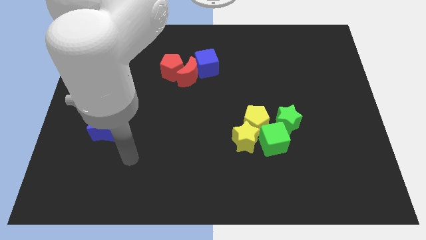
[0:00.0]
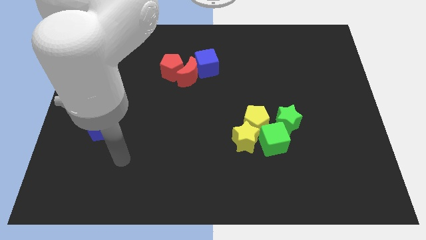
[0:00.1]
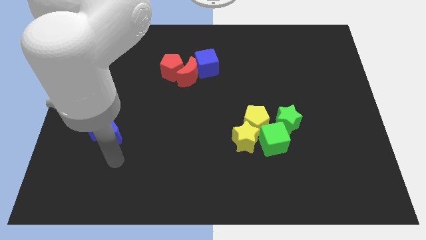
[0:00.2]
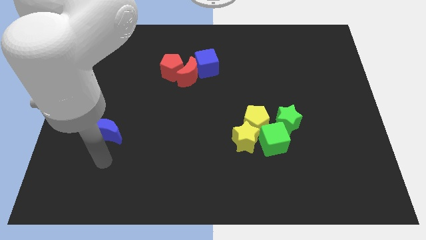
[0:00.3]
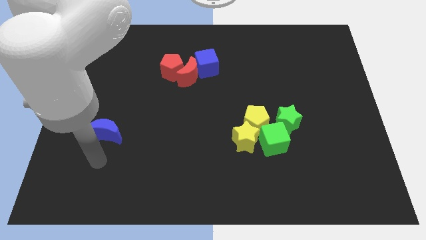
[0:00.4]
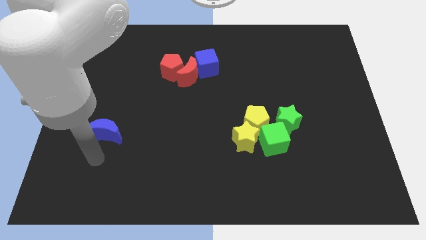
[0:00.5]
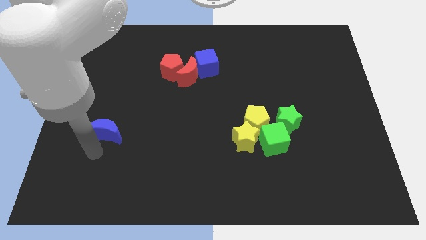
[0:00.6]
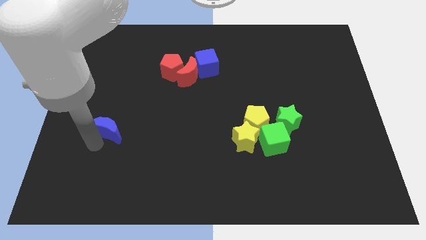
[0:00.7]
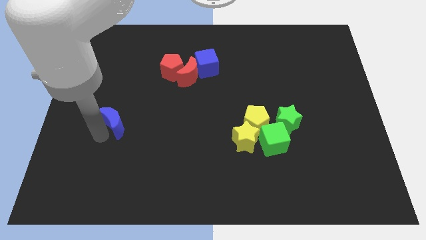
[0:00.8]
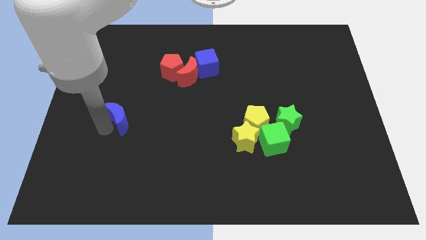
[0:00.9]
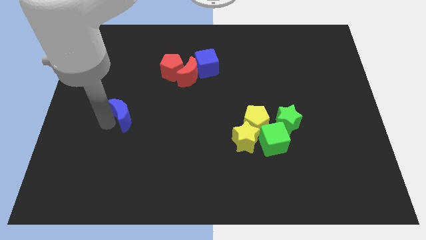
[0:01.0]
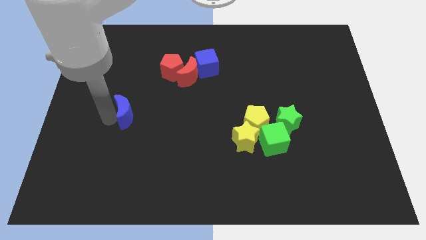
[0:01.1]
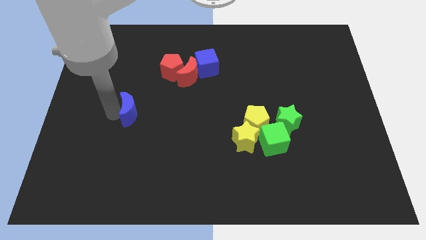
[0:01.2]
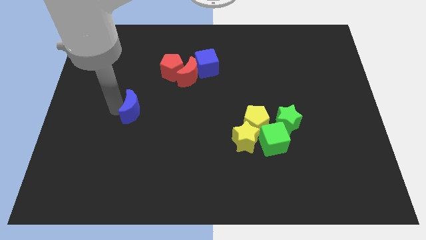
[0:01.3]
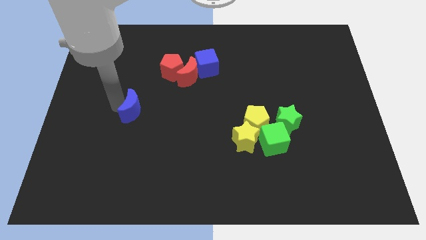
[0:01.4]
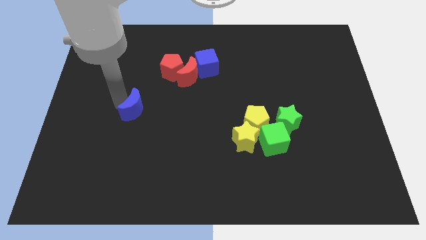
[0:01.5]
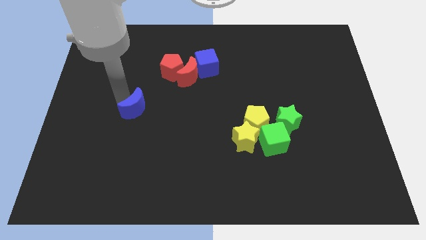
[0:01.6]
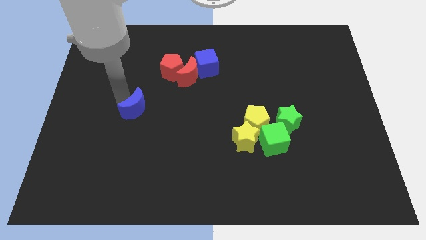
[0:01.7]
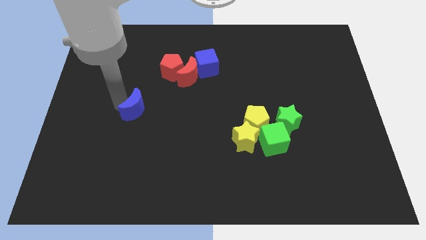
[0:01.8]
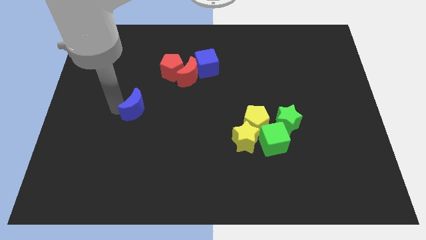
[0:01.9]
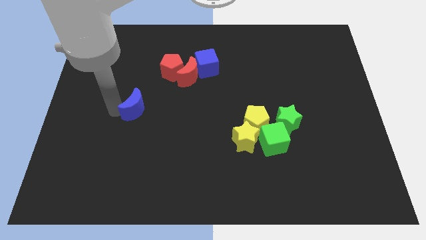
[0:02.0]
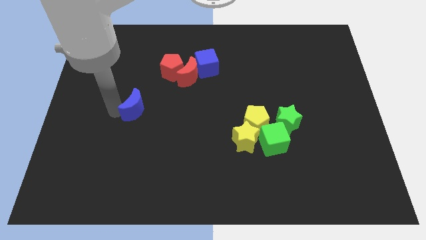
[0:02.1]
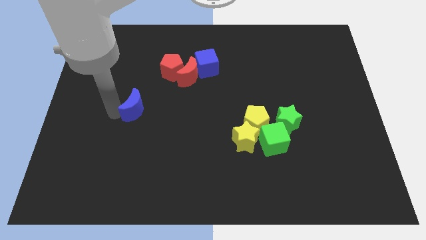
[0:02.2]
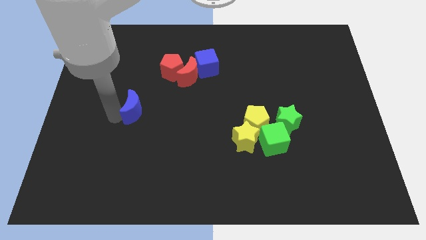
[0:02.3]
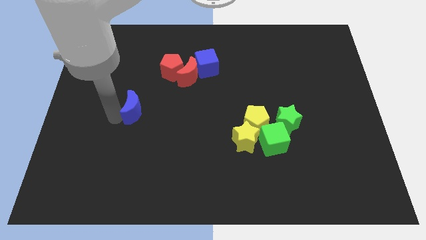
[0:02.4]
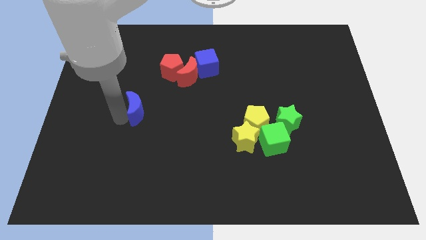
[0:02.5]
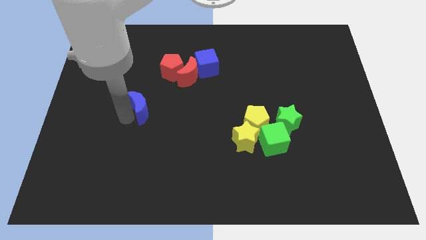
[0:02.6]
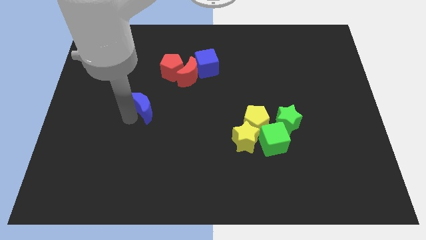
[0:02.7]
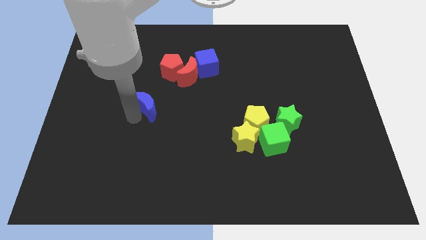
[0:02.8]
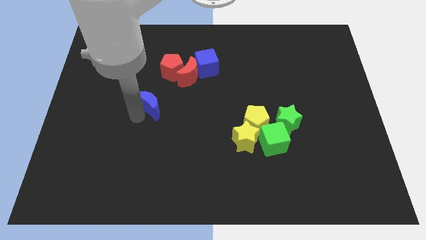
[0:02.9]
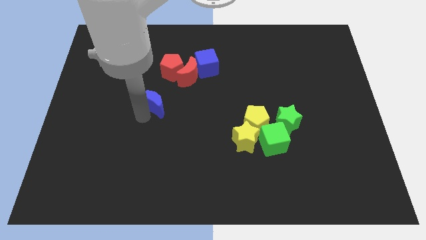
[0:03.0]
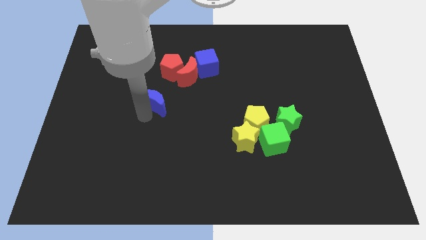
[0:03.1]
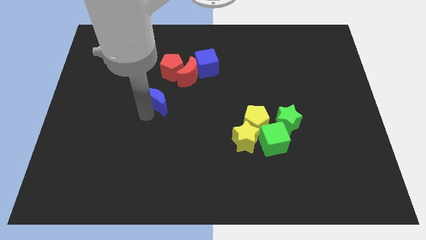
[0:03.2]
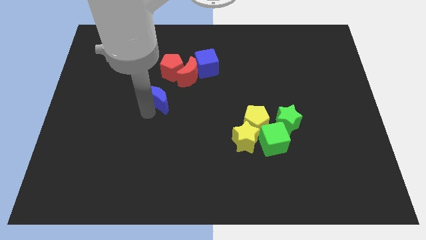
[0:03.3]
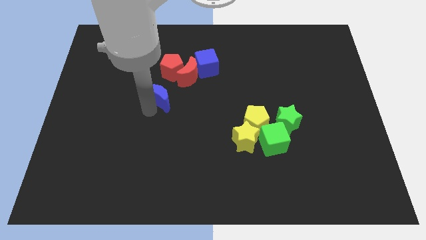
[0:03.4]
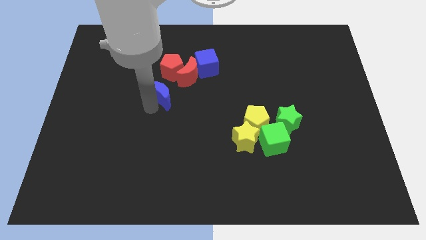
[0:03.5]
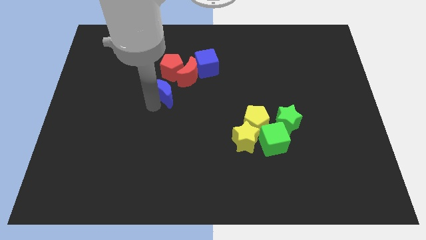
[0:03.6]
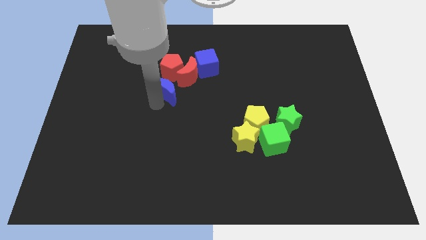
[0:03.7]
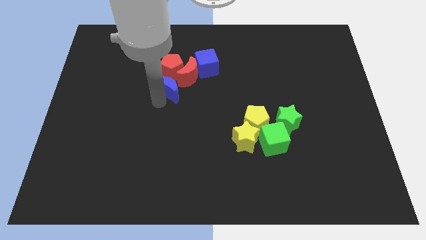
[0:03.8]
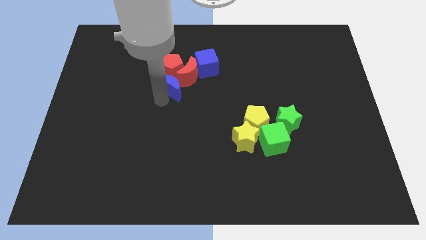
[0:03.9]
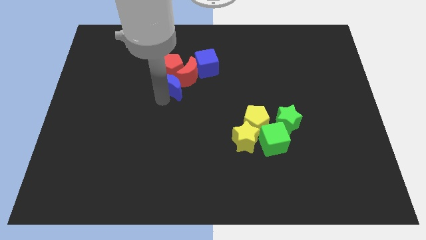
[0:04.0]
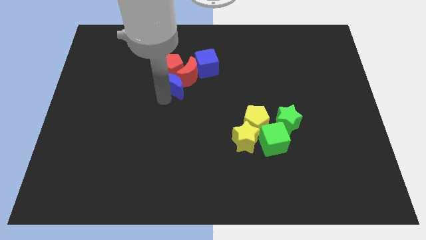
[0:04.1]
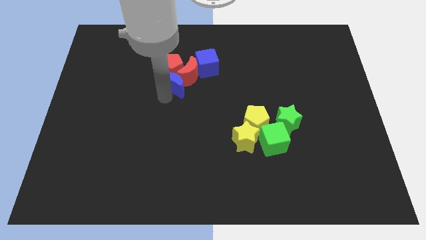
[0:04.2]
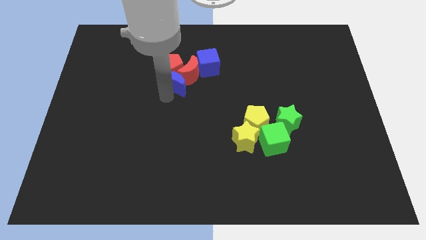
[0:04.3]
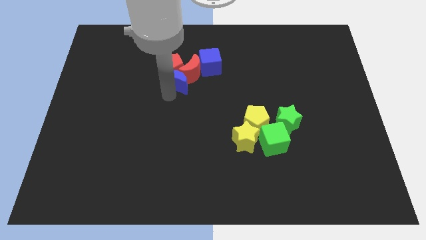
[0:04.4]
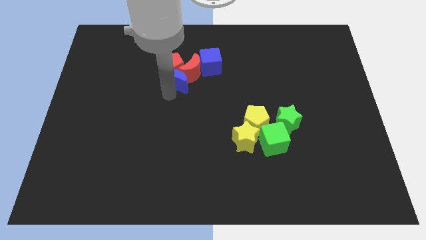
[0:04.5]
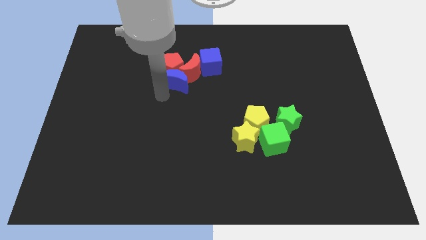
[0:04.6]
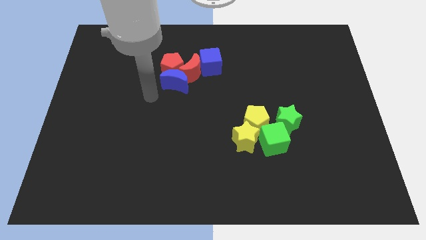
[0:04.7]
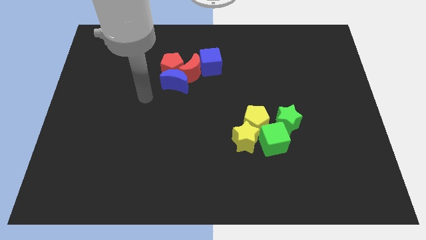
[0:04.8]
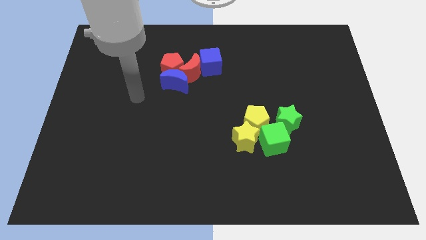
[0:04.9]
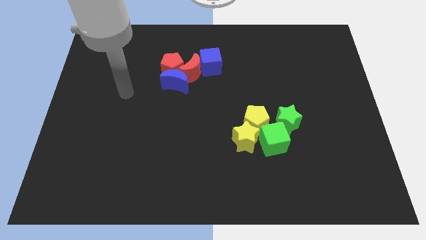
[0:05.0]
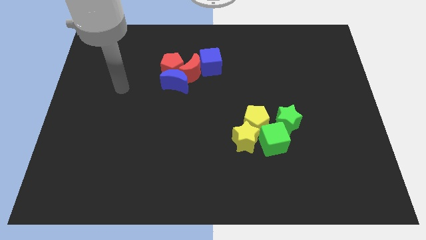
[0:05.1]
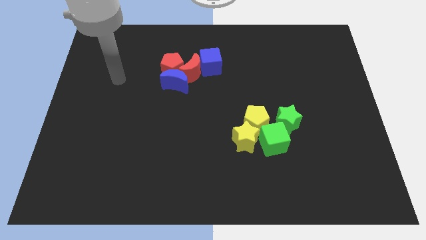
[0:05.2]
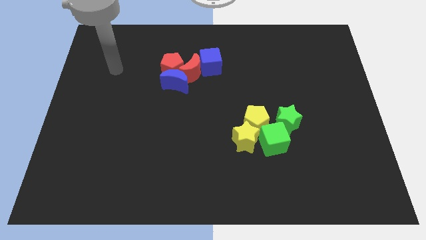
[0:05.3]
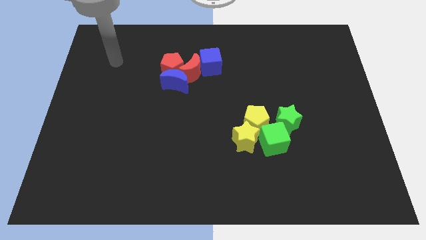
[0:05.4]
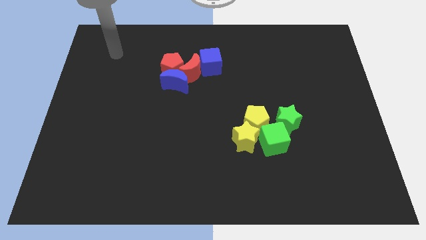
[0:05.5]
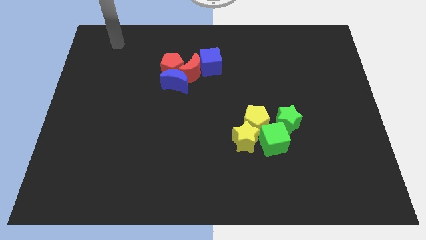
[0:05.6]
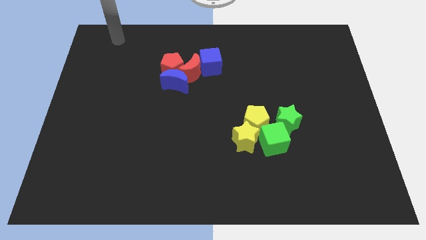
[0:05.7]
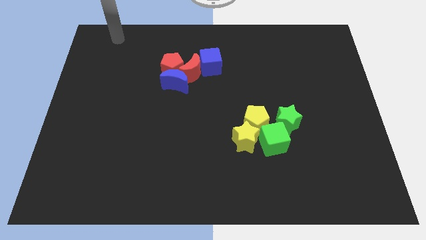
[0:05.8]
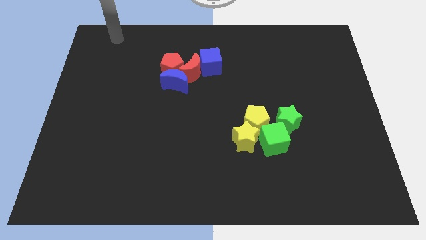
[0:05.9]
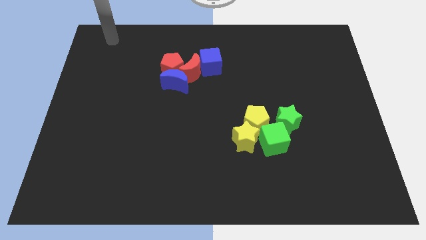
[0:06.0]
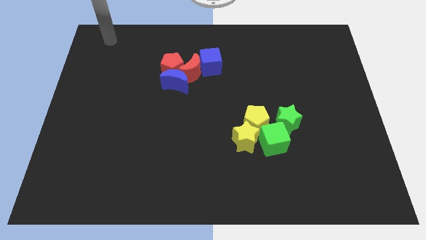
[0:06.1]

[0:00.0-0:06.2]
move the blue moon below the red moon

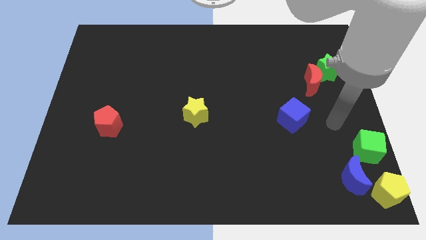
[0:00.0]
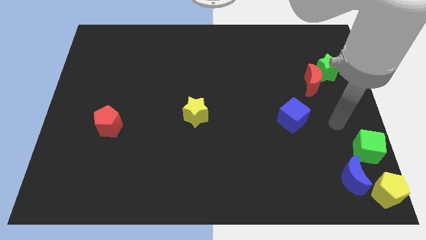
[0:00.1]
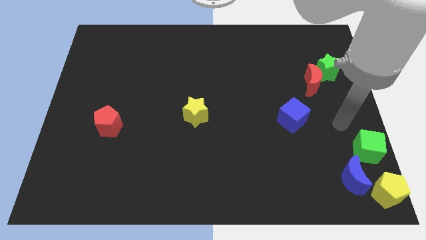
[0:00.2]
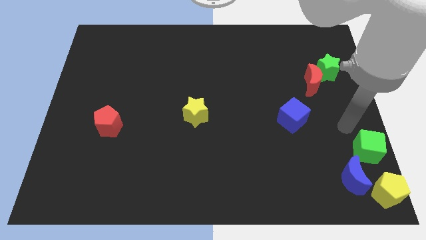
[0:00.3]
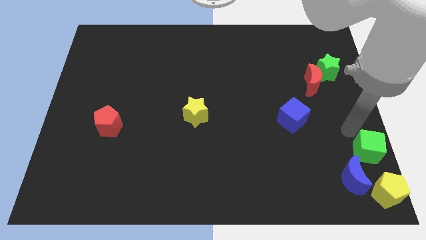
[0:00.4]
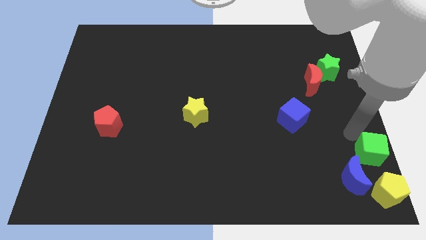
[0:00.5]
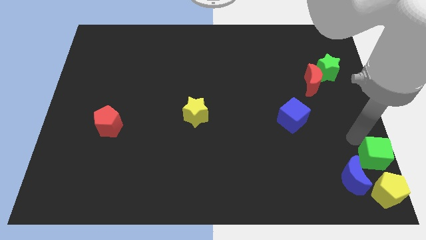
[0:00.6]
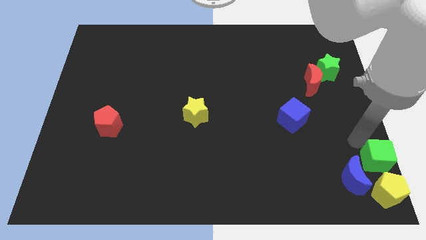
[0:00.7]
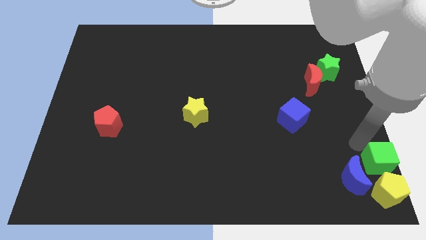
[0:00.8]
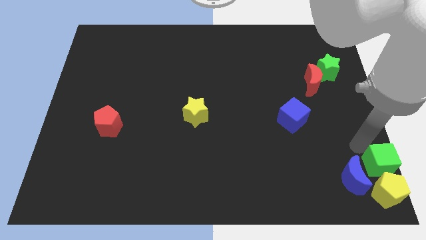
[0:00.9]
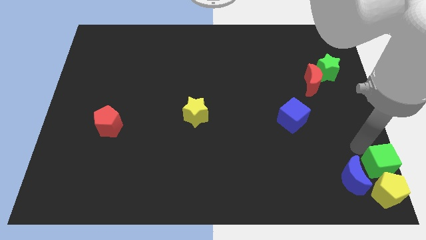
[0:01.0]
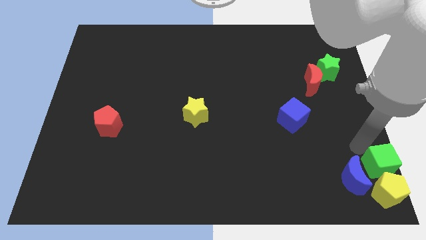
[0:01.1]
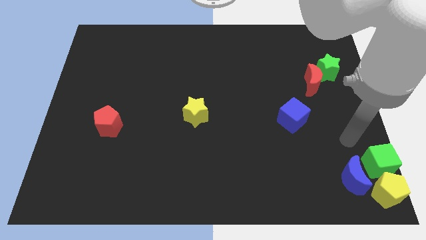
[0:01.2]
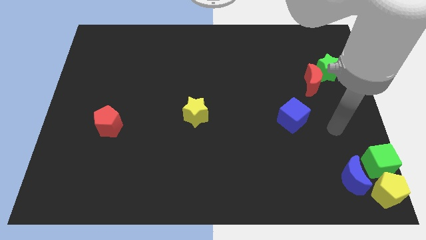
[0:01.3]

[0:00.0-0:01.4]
place the green cube at the top of yellow penatgon

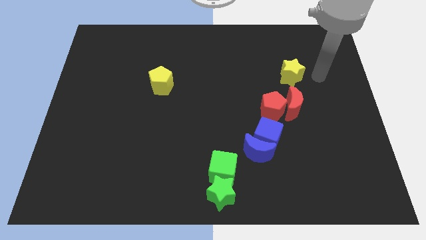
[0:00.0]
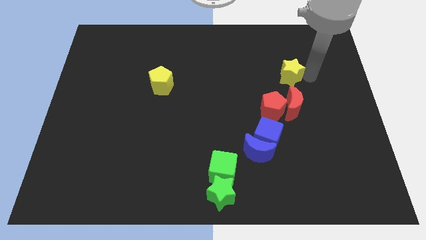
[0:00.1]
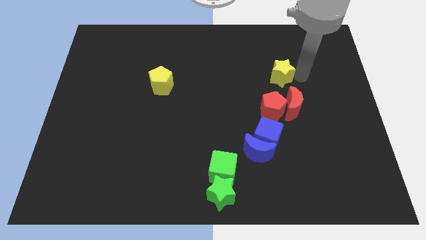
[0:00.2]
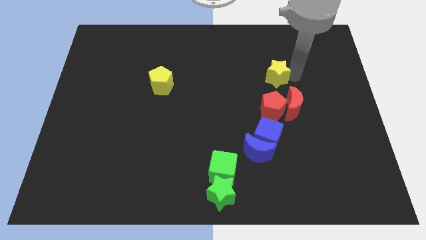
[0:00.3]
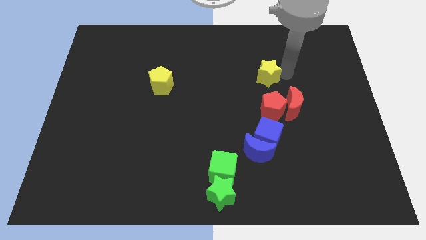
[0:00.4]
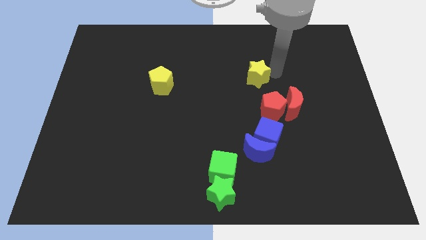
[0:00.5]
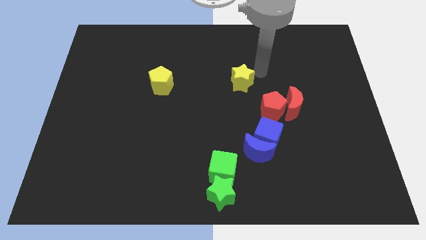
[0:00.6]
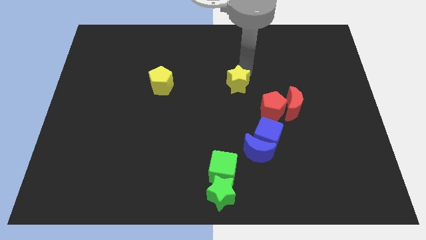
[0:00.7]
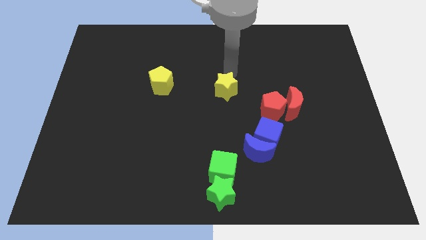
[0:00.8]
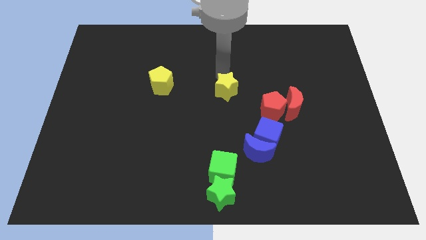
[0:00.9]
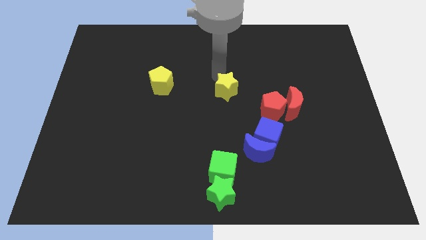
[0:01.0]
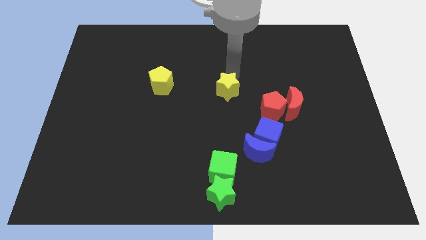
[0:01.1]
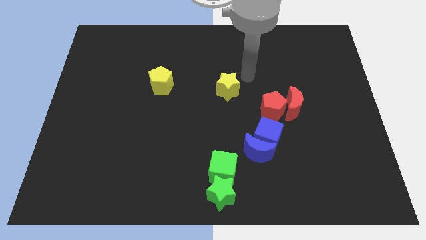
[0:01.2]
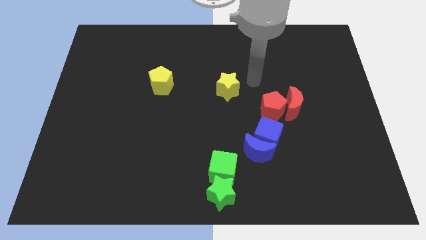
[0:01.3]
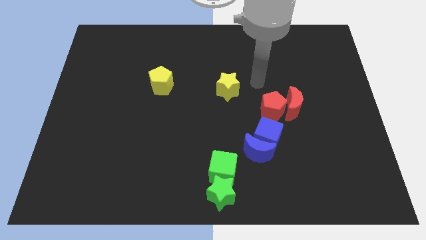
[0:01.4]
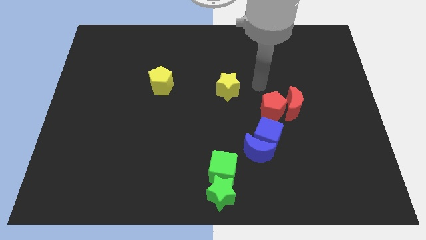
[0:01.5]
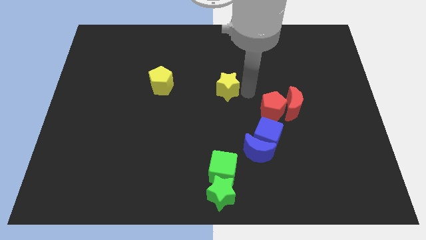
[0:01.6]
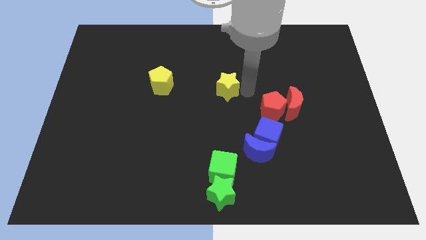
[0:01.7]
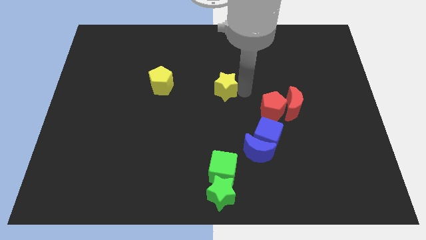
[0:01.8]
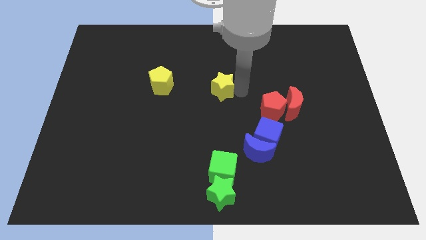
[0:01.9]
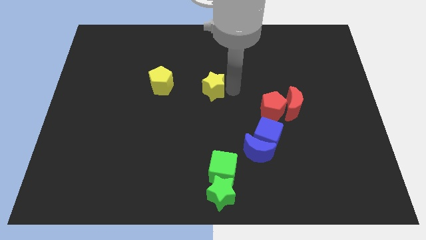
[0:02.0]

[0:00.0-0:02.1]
drag the yellow star towards the yellow pentagon
